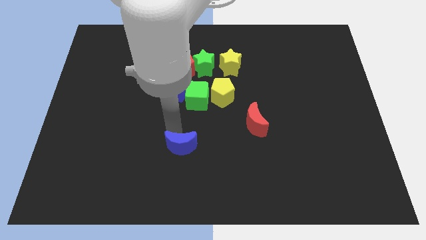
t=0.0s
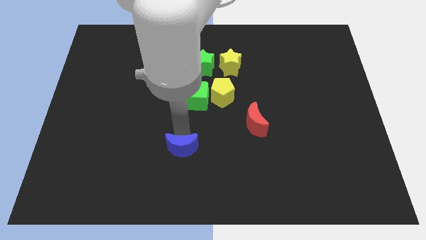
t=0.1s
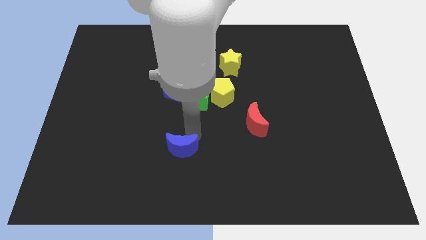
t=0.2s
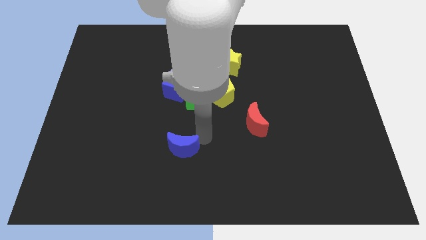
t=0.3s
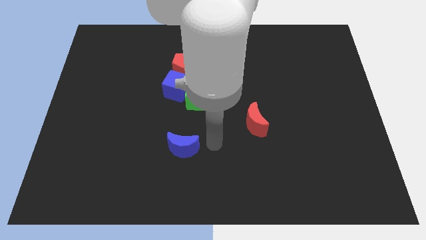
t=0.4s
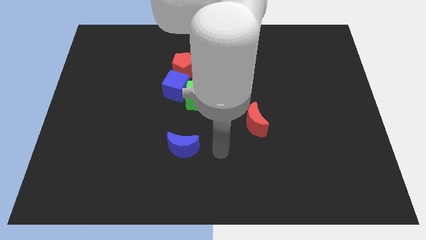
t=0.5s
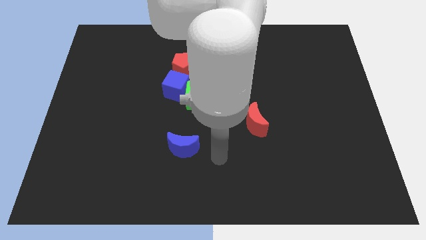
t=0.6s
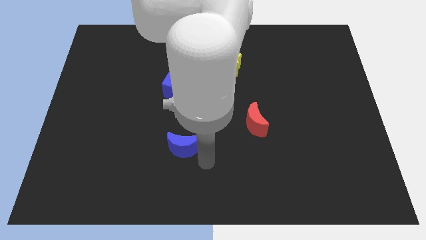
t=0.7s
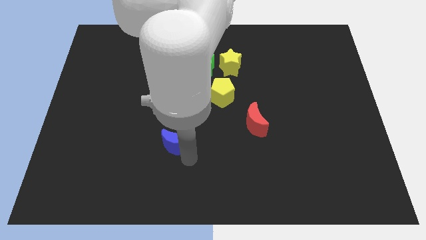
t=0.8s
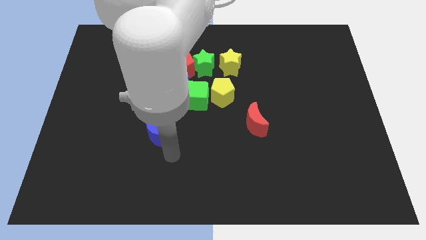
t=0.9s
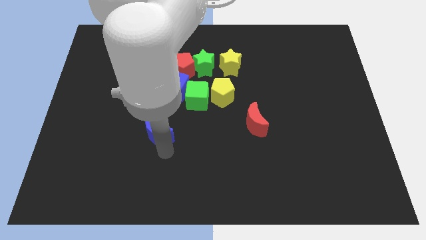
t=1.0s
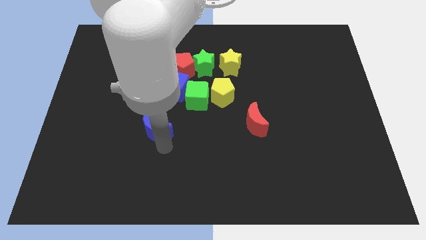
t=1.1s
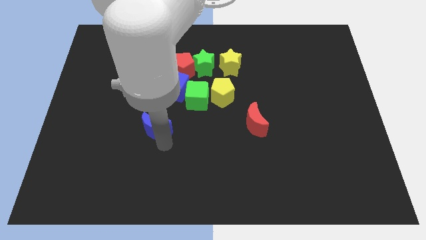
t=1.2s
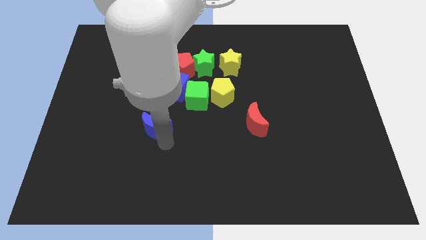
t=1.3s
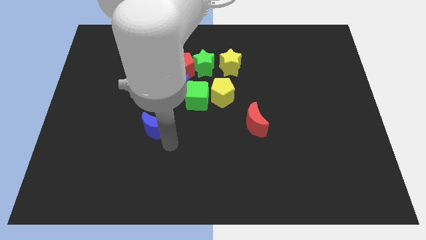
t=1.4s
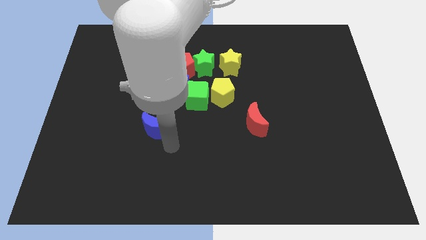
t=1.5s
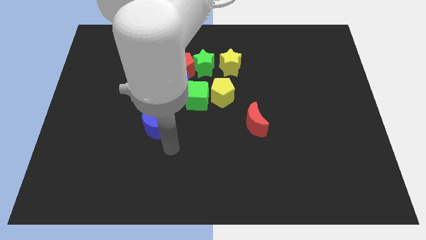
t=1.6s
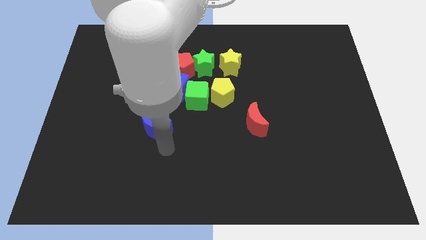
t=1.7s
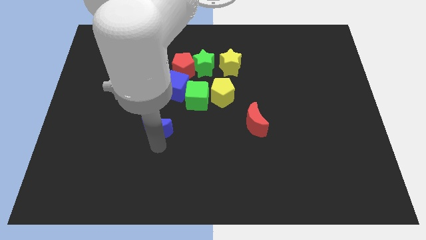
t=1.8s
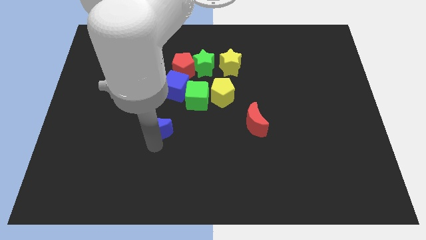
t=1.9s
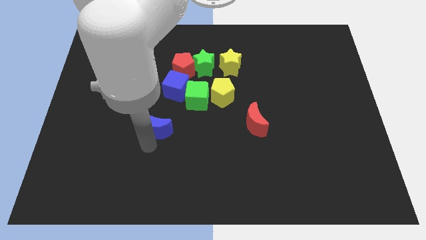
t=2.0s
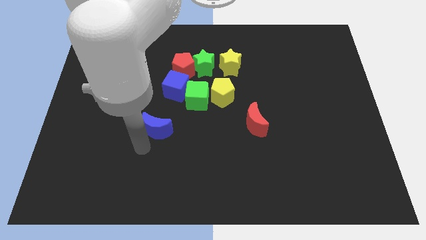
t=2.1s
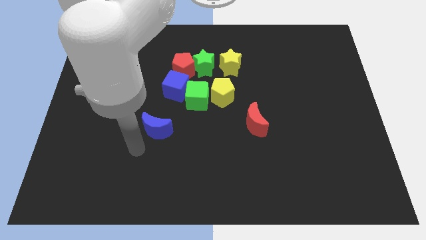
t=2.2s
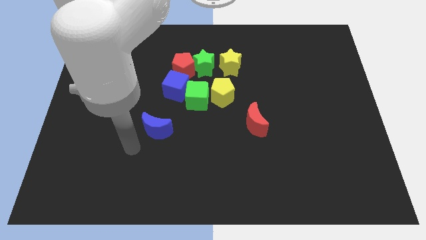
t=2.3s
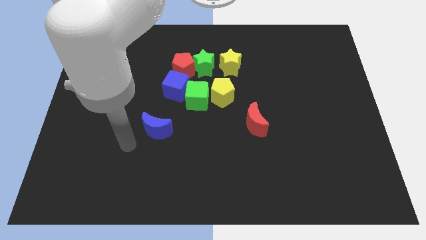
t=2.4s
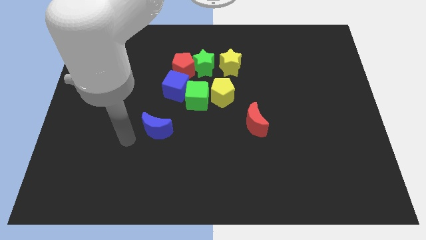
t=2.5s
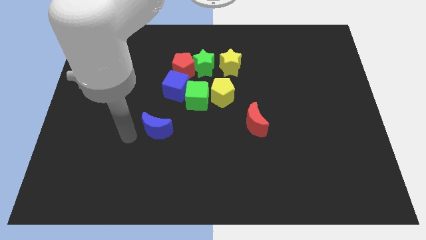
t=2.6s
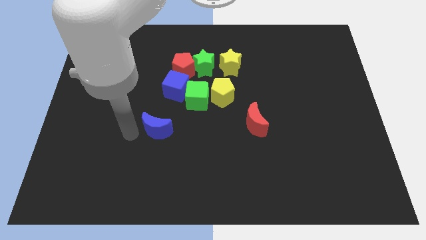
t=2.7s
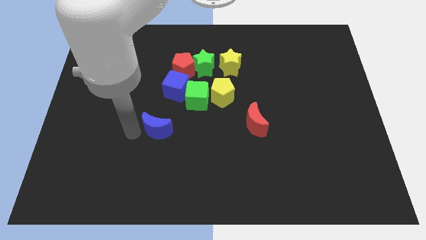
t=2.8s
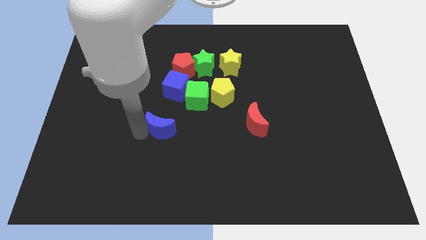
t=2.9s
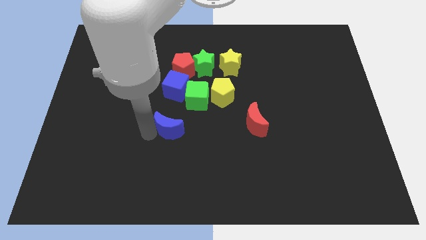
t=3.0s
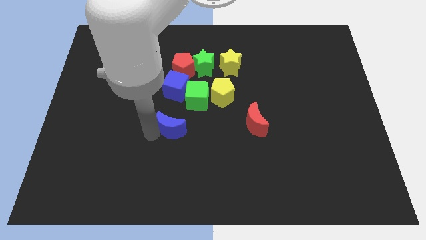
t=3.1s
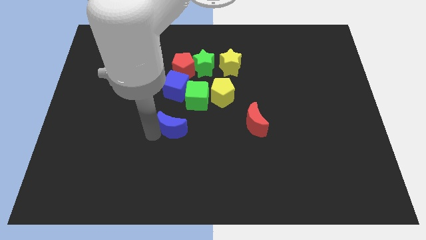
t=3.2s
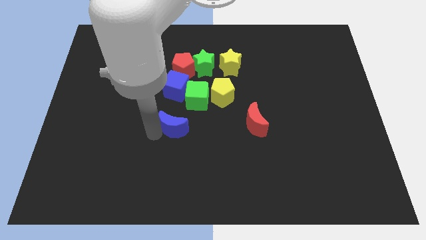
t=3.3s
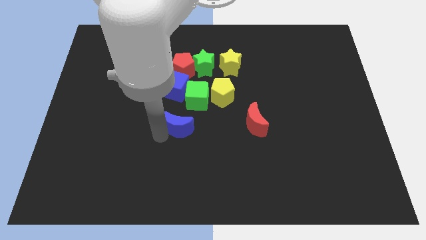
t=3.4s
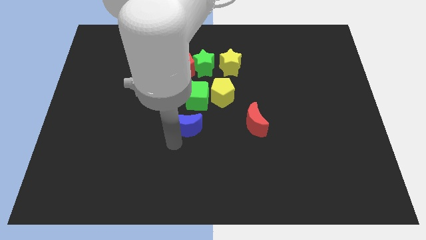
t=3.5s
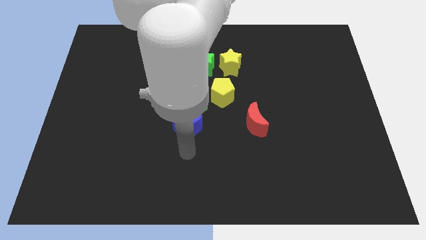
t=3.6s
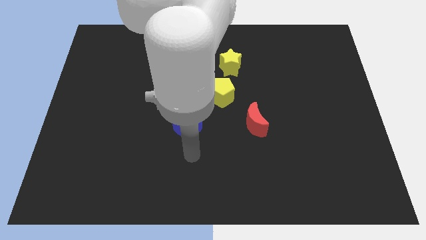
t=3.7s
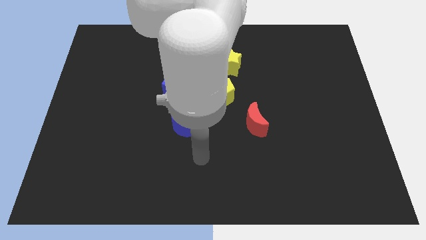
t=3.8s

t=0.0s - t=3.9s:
move the blue moon below the green cube

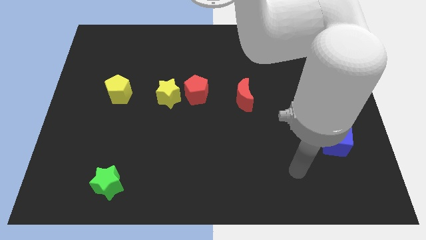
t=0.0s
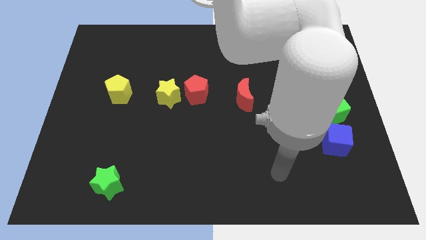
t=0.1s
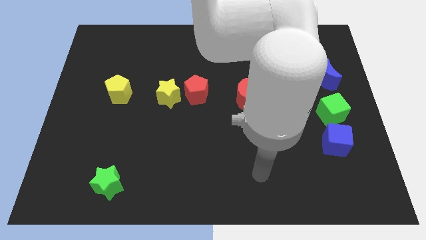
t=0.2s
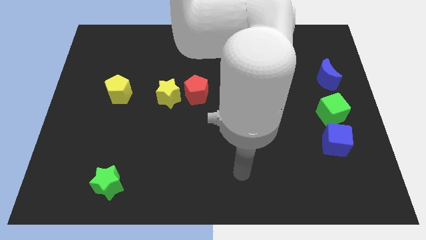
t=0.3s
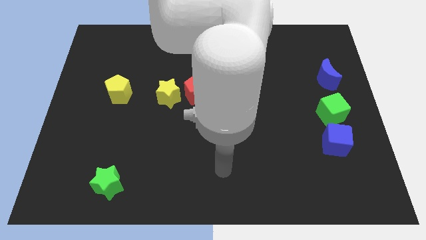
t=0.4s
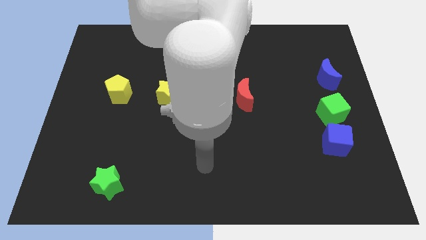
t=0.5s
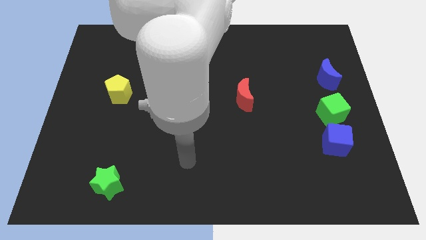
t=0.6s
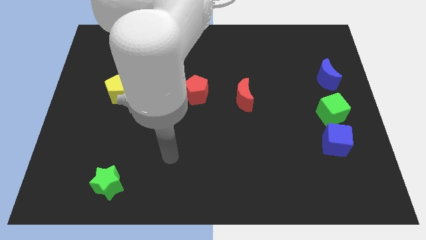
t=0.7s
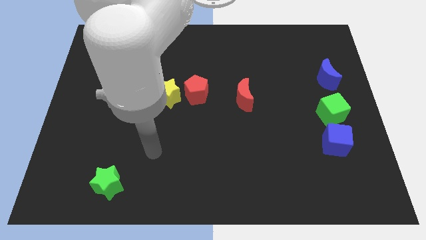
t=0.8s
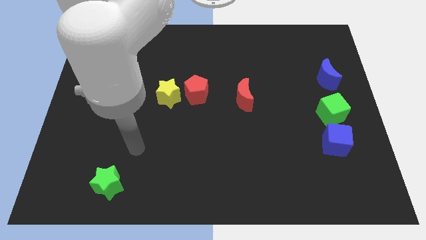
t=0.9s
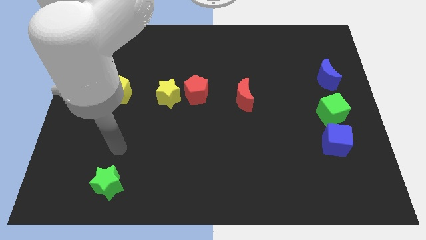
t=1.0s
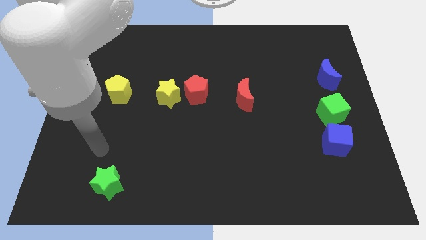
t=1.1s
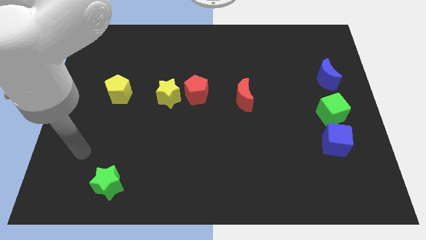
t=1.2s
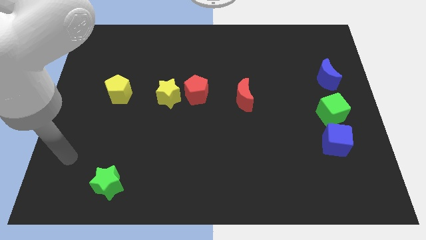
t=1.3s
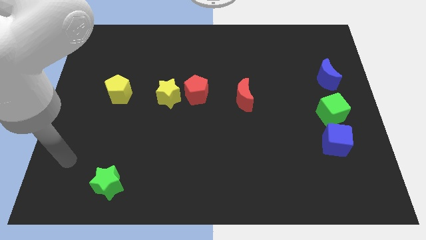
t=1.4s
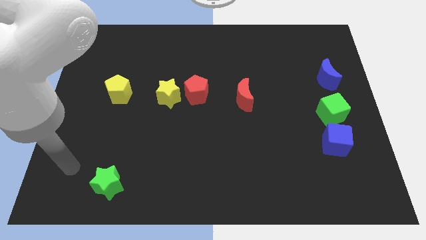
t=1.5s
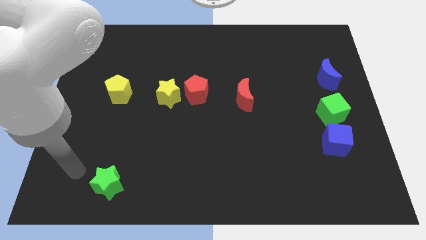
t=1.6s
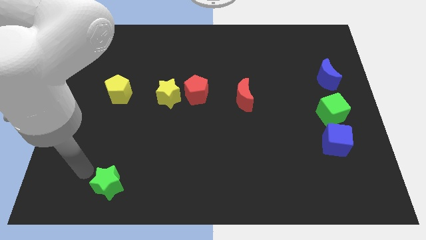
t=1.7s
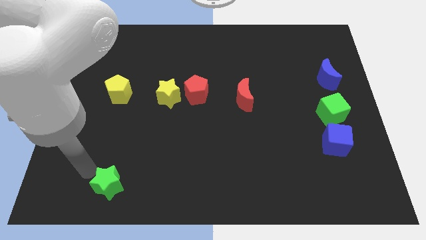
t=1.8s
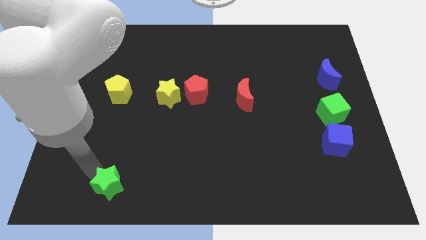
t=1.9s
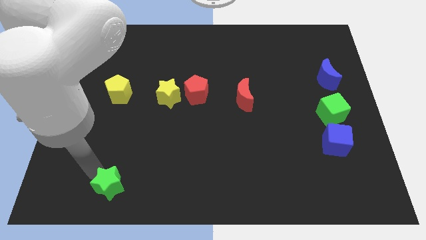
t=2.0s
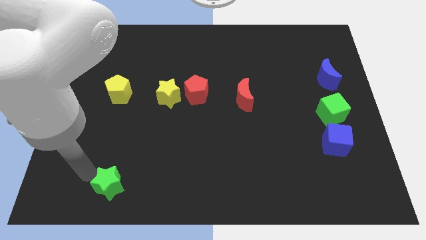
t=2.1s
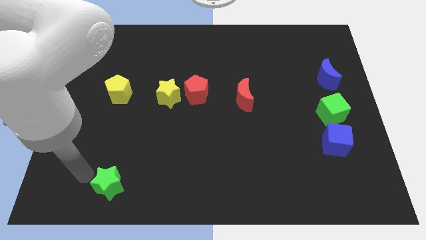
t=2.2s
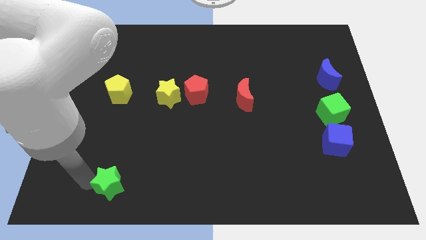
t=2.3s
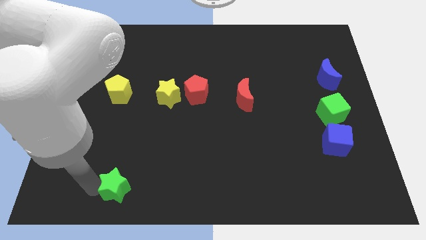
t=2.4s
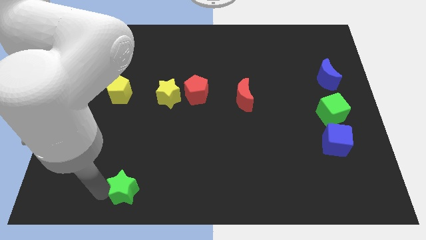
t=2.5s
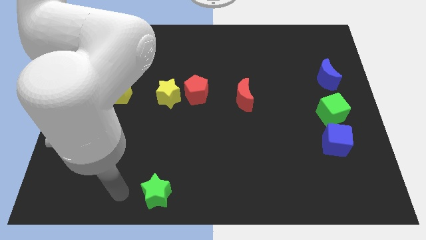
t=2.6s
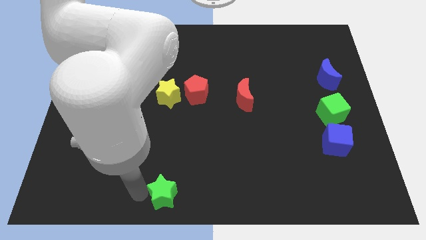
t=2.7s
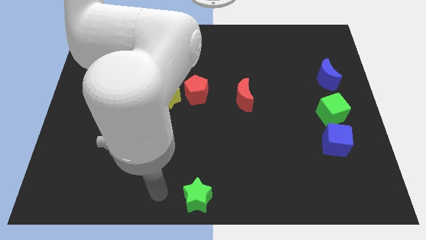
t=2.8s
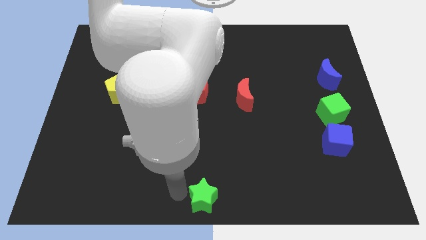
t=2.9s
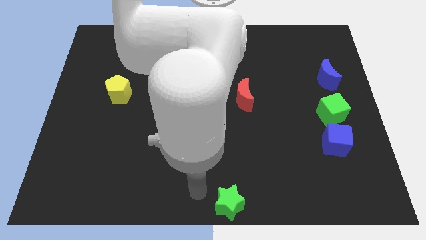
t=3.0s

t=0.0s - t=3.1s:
push the green star to the downwards

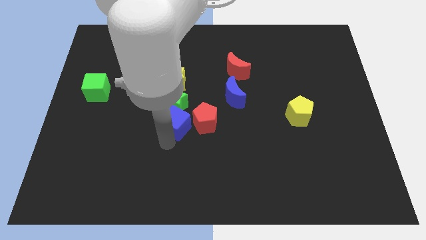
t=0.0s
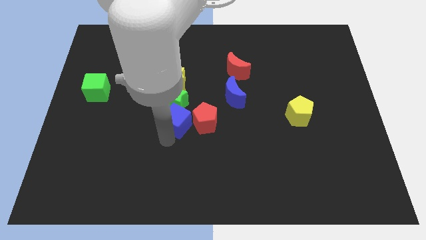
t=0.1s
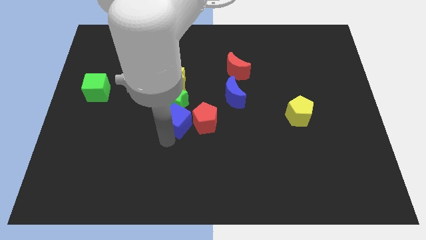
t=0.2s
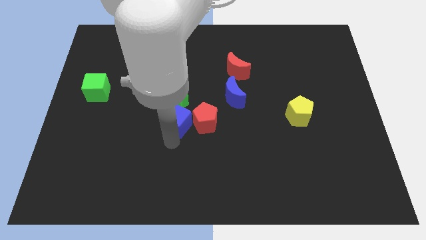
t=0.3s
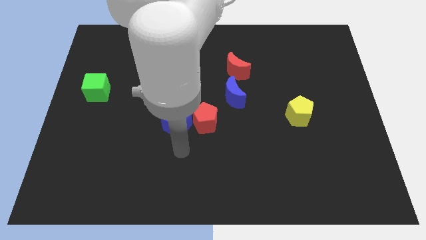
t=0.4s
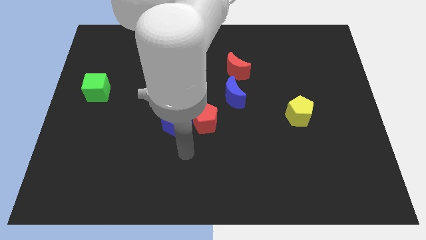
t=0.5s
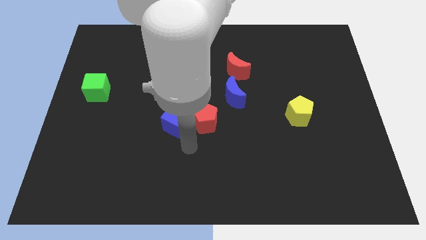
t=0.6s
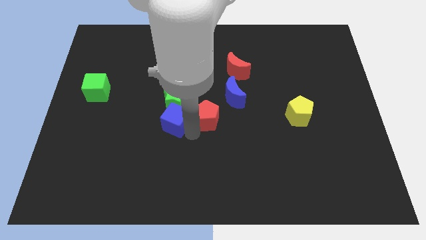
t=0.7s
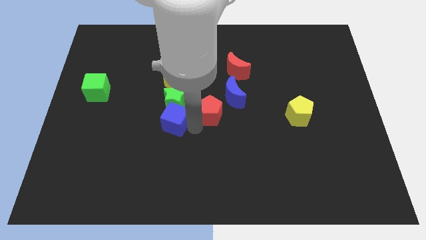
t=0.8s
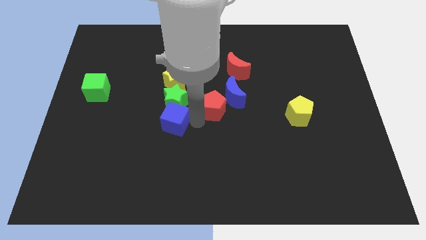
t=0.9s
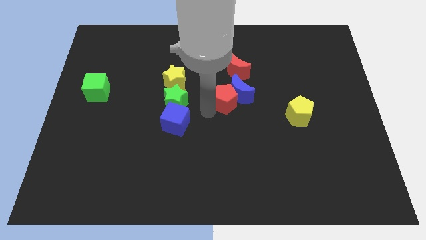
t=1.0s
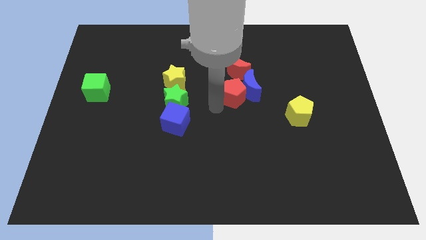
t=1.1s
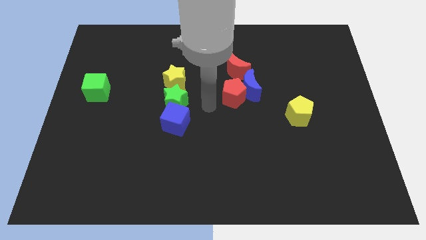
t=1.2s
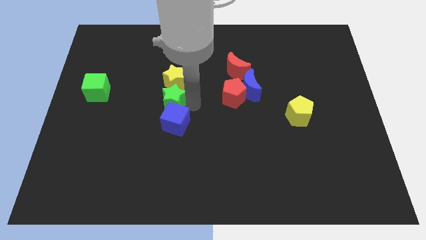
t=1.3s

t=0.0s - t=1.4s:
separate the red pentagon from the blue cube

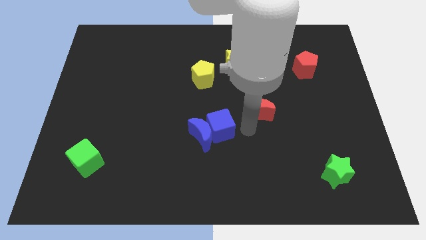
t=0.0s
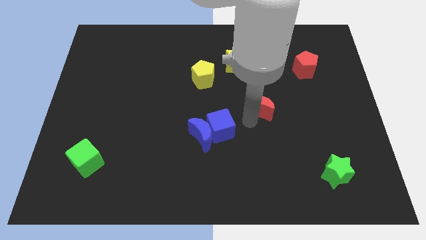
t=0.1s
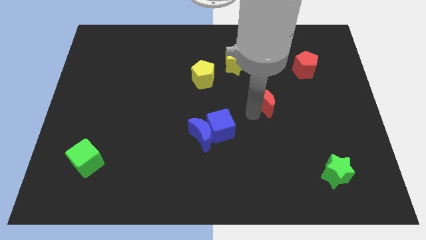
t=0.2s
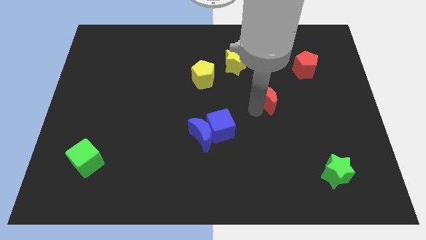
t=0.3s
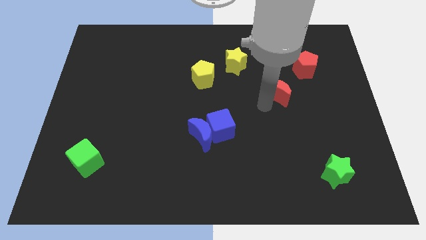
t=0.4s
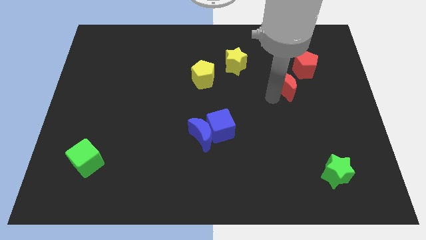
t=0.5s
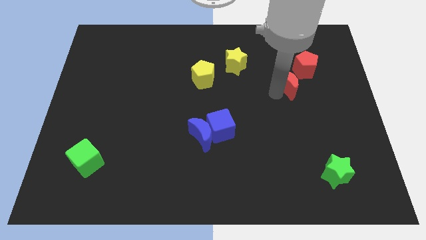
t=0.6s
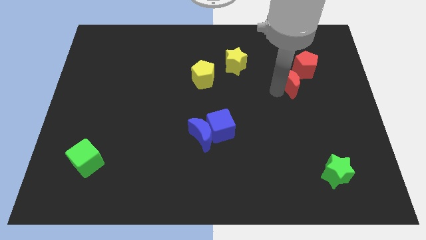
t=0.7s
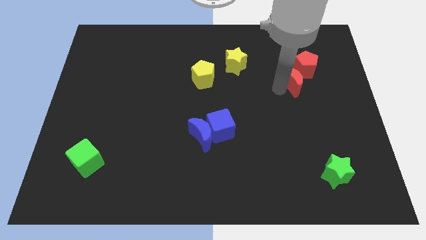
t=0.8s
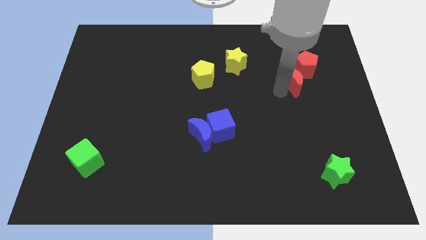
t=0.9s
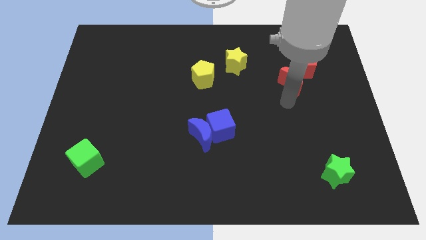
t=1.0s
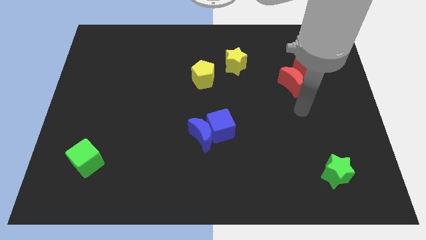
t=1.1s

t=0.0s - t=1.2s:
move the red moon into the red pentagon
